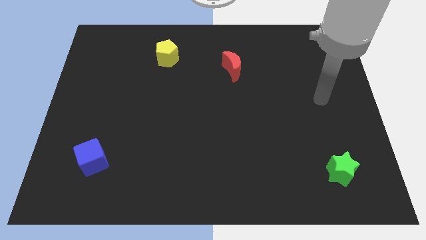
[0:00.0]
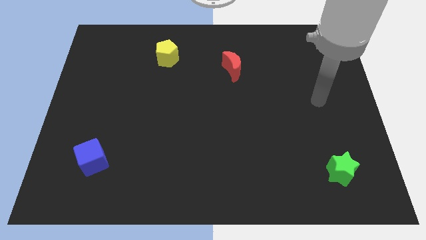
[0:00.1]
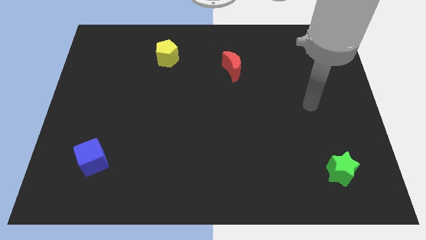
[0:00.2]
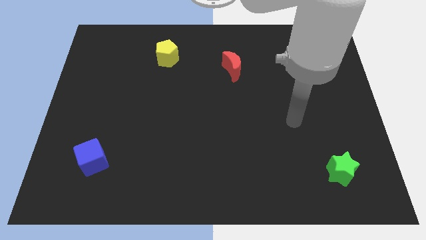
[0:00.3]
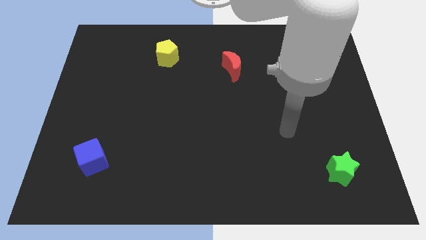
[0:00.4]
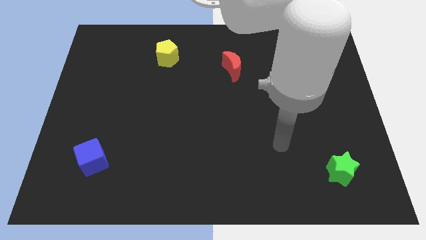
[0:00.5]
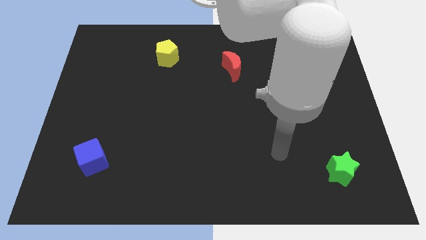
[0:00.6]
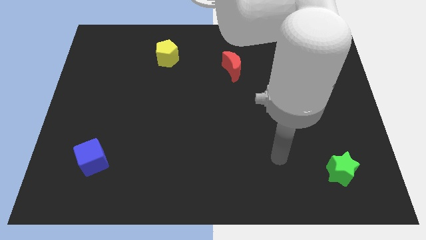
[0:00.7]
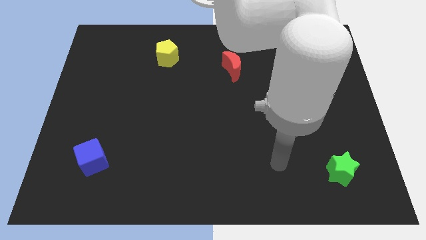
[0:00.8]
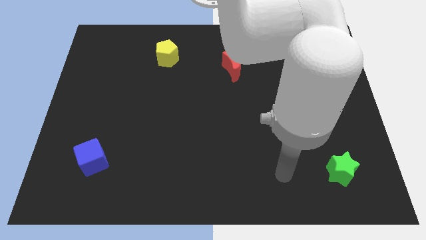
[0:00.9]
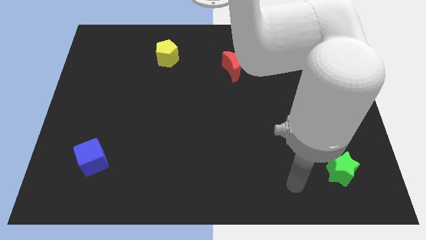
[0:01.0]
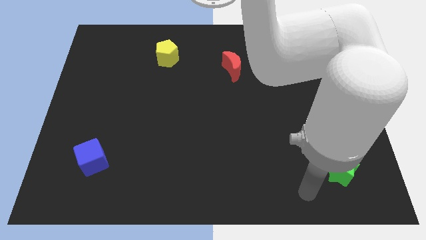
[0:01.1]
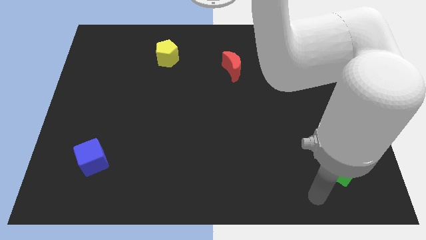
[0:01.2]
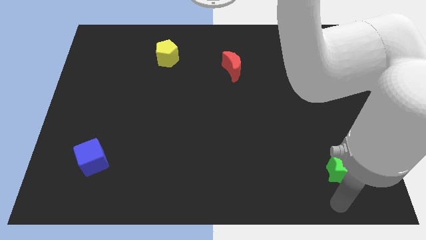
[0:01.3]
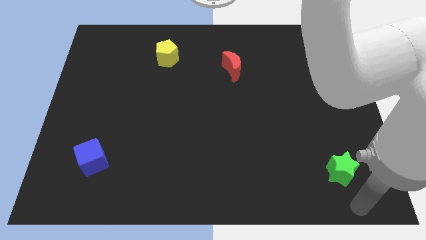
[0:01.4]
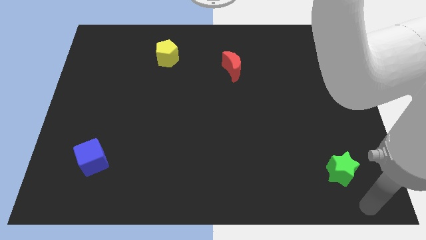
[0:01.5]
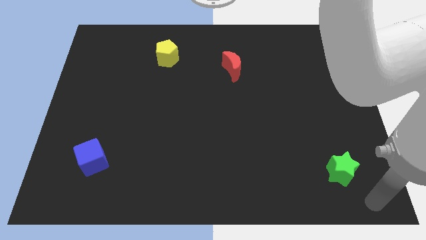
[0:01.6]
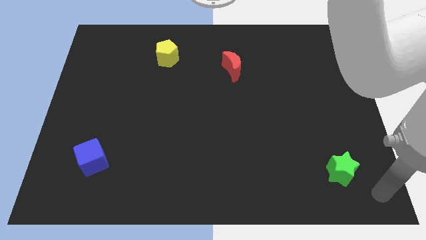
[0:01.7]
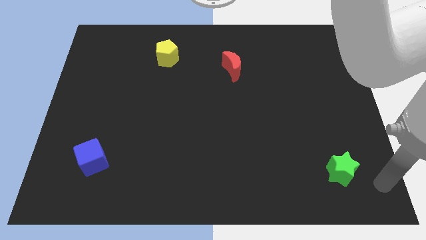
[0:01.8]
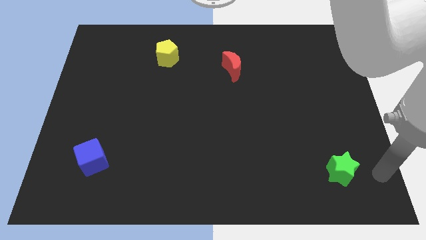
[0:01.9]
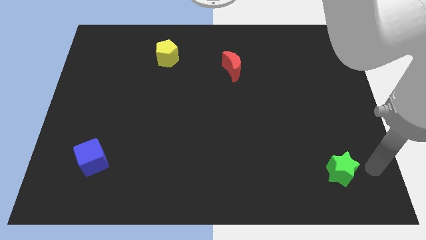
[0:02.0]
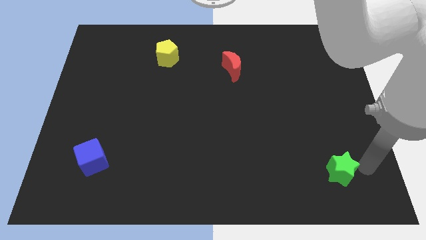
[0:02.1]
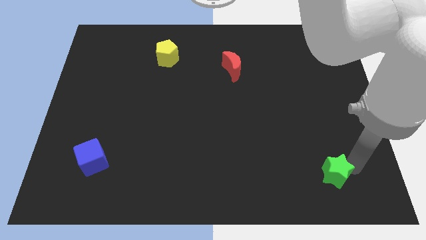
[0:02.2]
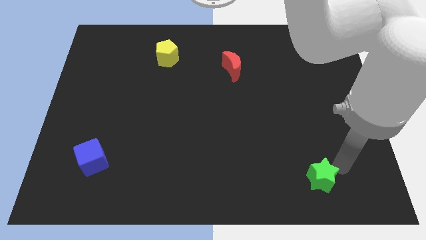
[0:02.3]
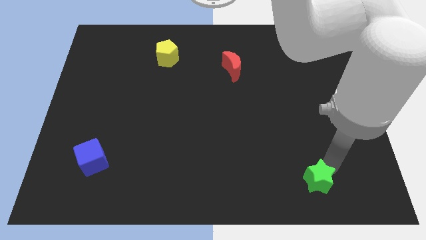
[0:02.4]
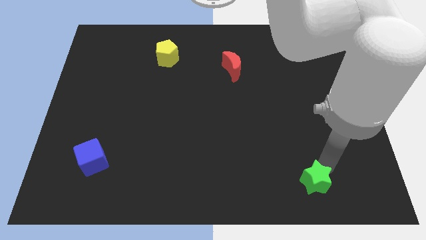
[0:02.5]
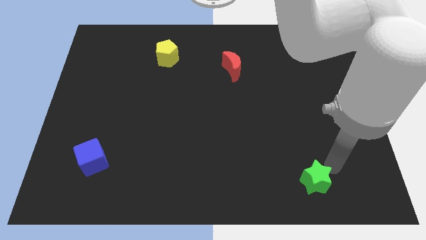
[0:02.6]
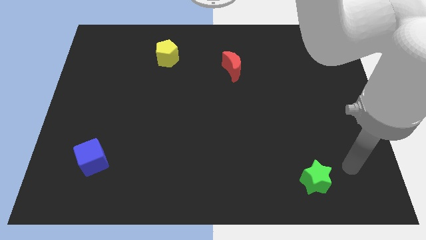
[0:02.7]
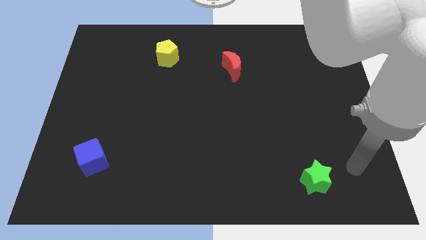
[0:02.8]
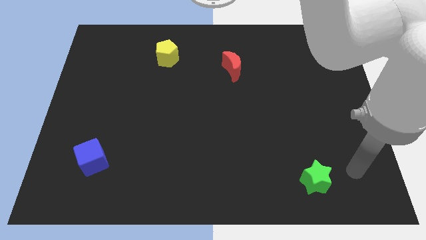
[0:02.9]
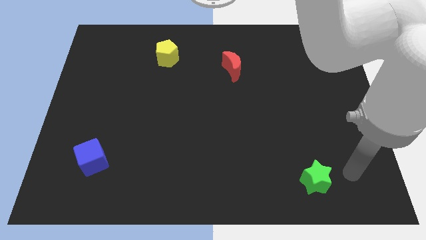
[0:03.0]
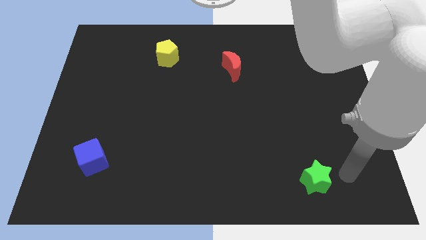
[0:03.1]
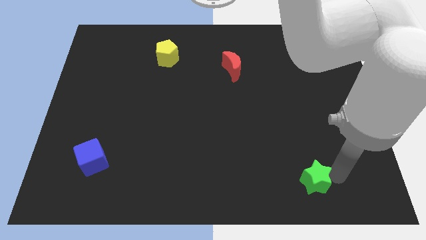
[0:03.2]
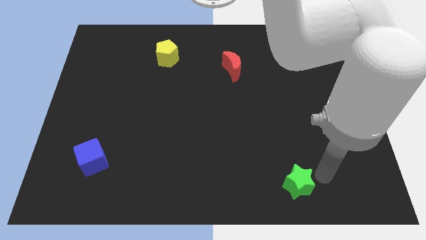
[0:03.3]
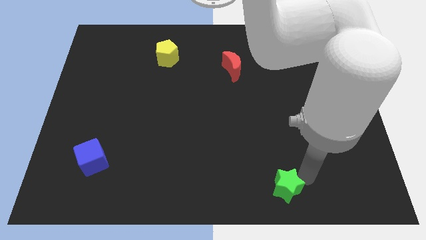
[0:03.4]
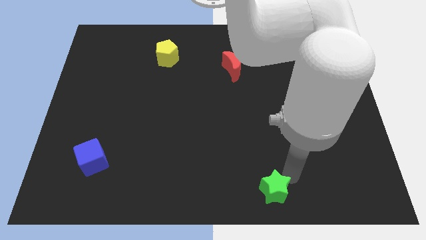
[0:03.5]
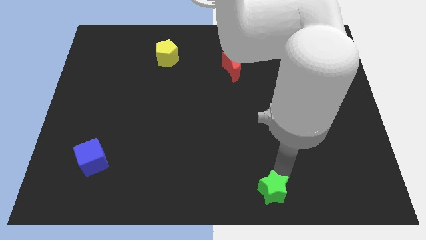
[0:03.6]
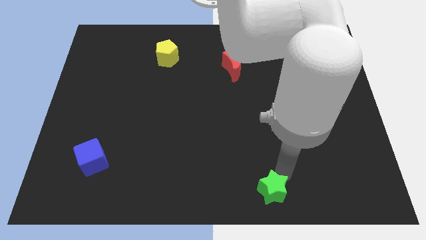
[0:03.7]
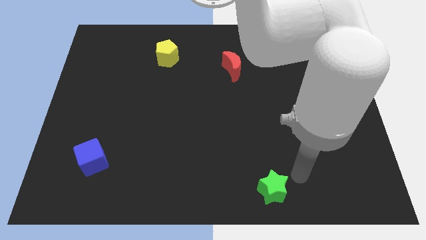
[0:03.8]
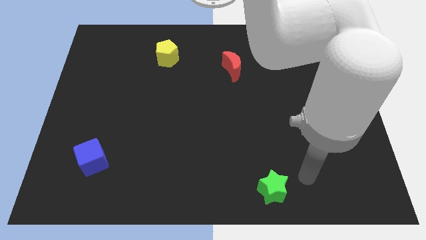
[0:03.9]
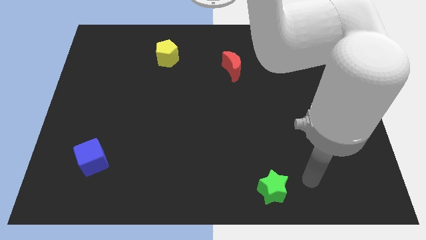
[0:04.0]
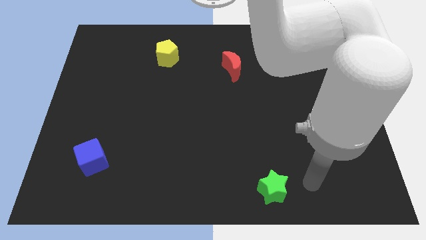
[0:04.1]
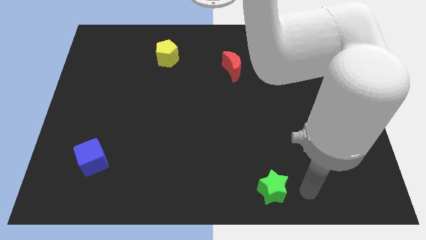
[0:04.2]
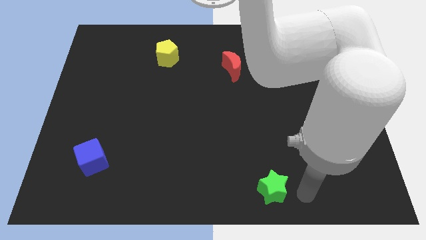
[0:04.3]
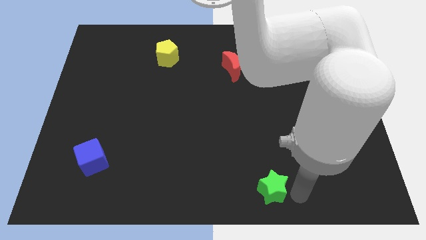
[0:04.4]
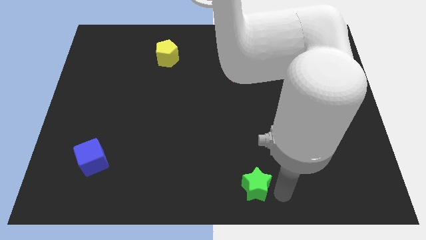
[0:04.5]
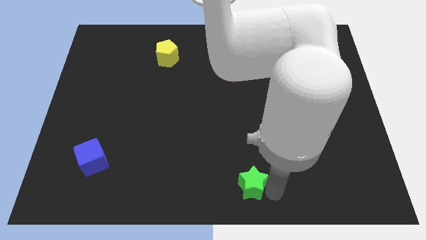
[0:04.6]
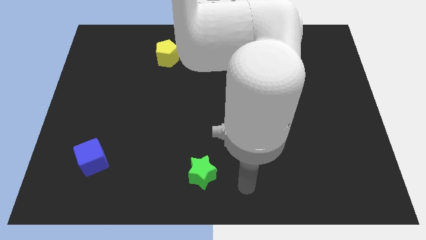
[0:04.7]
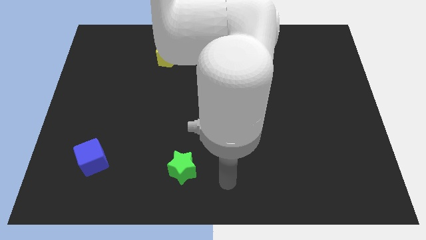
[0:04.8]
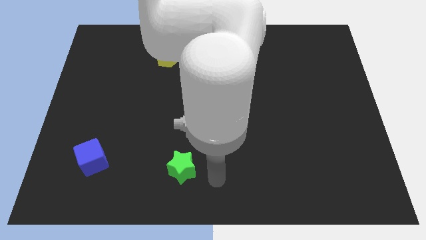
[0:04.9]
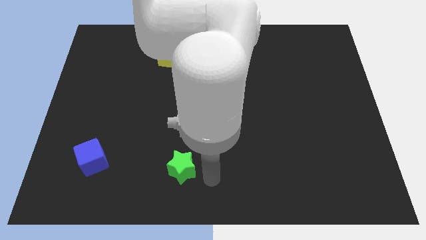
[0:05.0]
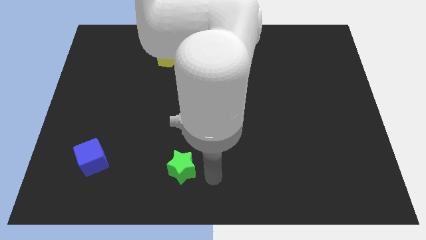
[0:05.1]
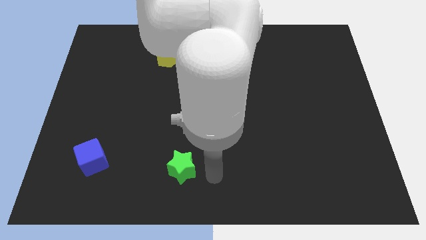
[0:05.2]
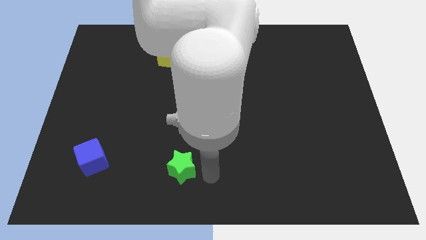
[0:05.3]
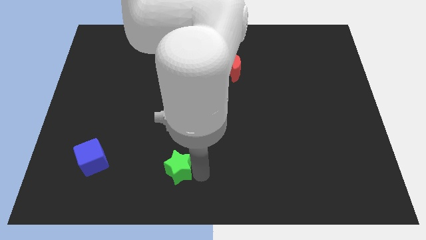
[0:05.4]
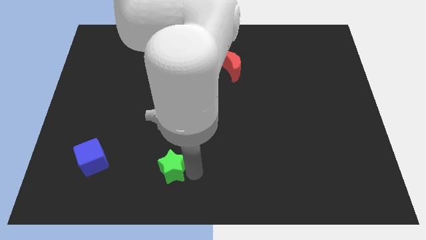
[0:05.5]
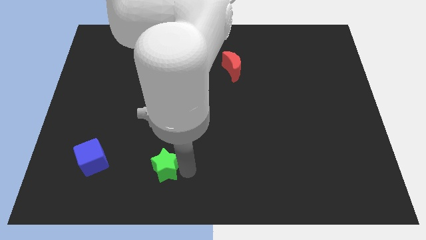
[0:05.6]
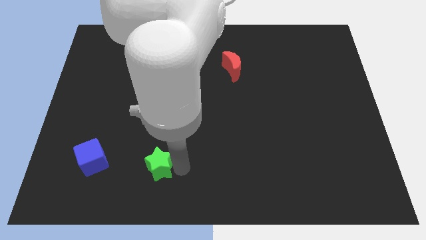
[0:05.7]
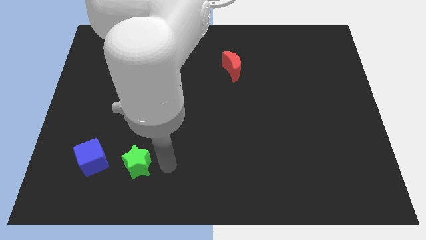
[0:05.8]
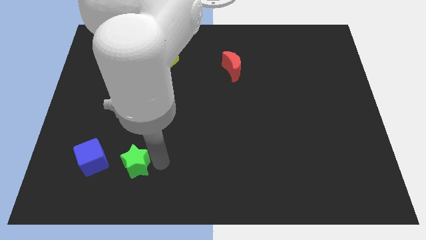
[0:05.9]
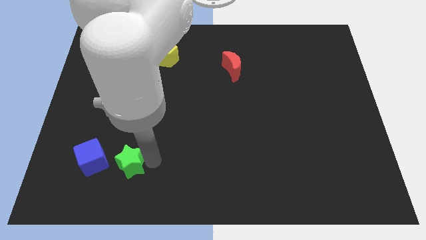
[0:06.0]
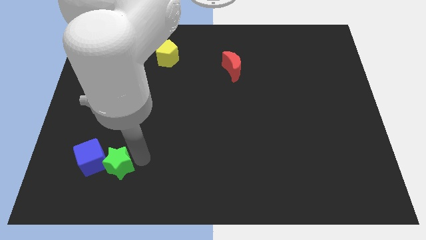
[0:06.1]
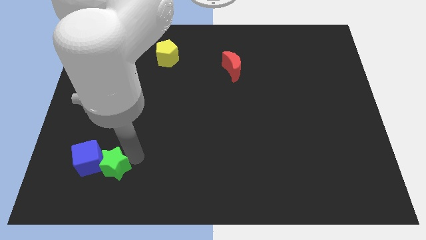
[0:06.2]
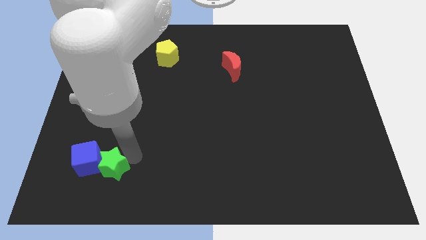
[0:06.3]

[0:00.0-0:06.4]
slide the star next to the blue cube

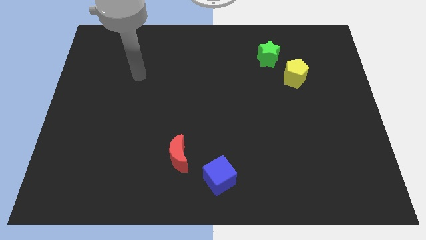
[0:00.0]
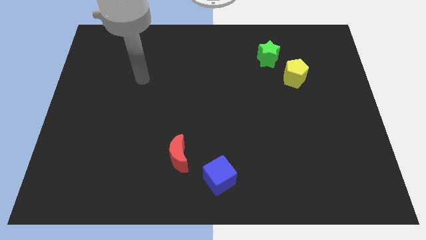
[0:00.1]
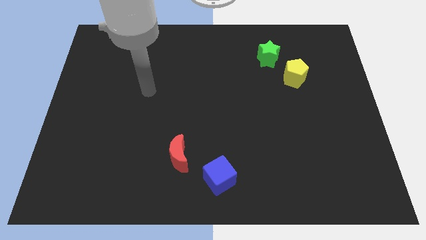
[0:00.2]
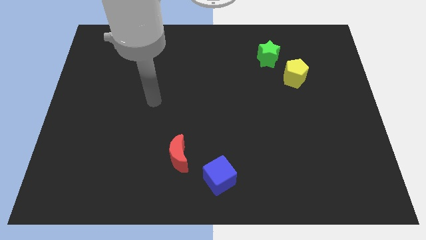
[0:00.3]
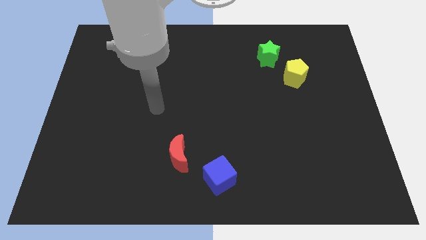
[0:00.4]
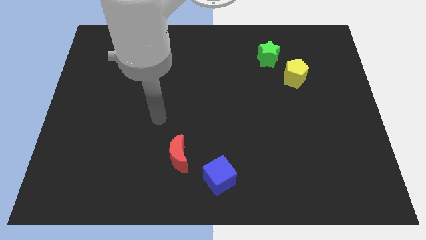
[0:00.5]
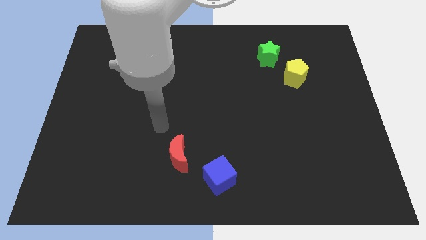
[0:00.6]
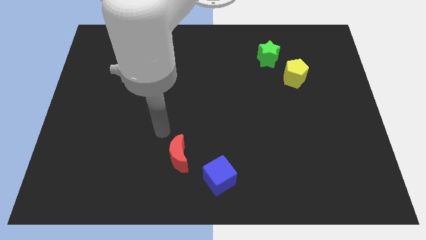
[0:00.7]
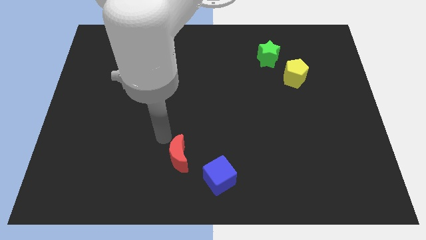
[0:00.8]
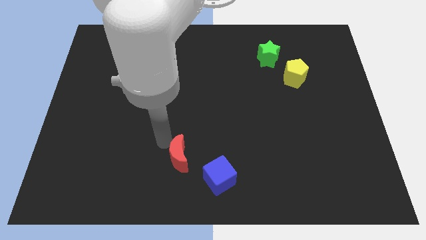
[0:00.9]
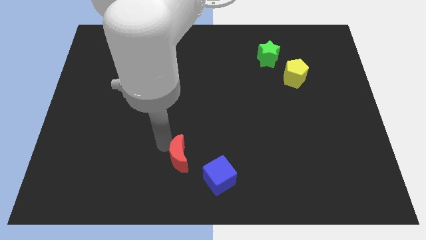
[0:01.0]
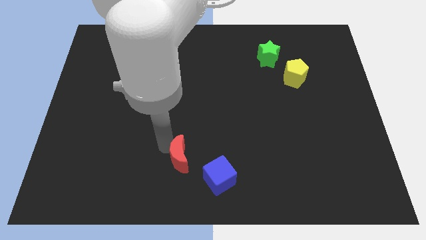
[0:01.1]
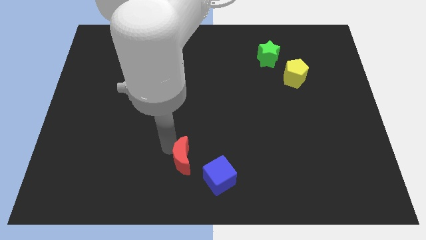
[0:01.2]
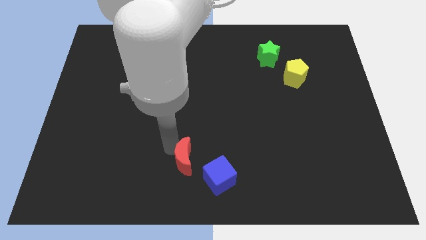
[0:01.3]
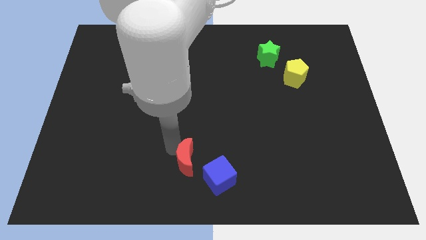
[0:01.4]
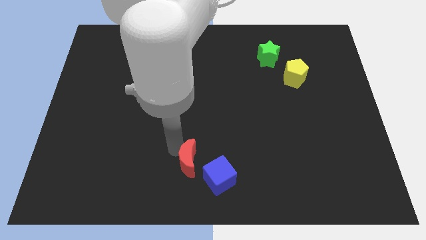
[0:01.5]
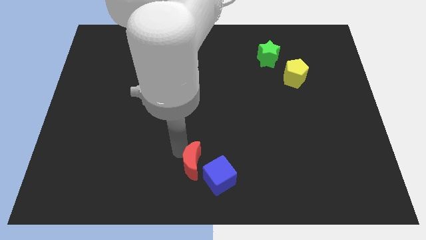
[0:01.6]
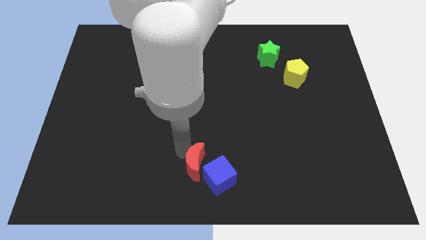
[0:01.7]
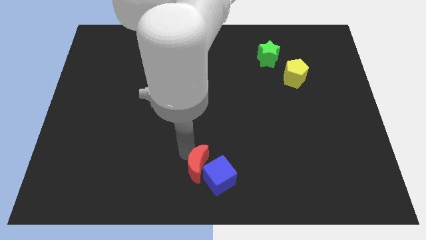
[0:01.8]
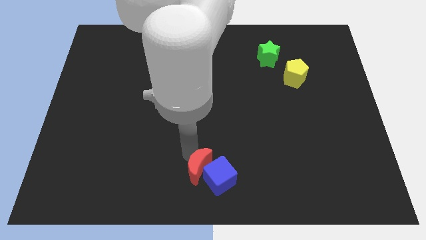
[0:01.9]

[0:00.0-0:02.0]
push the moon next to the blue cube

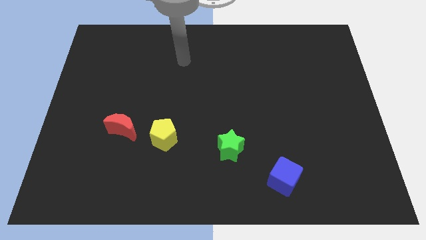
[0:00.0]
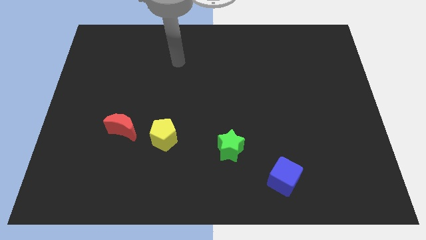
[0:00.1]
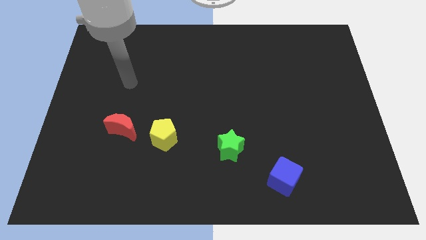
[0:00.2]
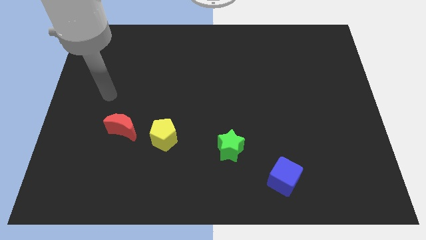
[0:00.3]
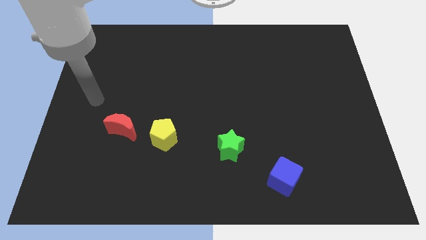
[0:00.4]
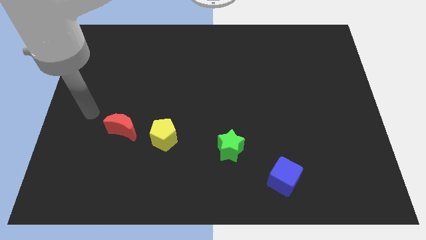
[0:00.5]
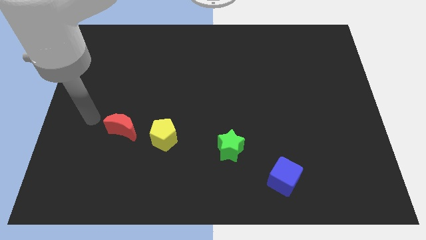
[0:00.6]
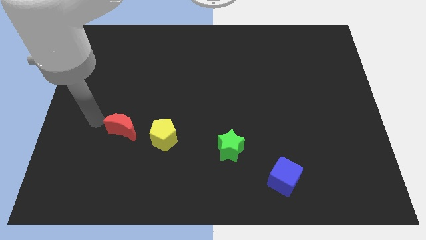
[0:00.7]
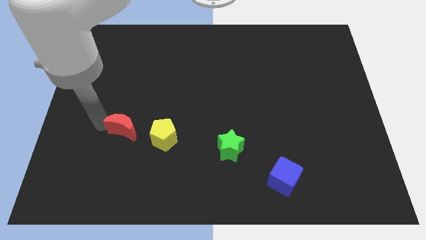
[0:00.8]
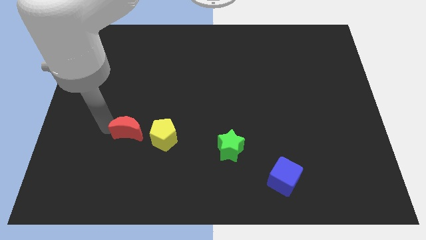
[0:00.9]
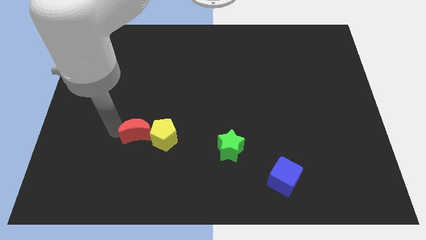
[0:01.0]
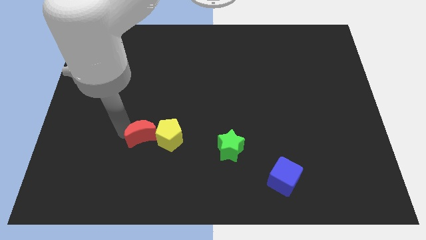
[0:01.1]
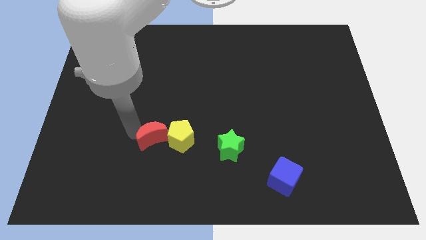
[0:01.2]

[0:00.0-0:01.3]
slide the red moon towards the yellow pentagon
